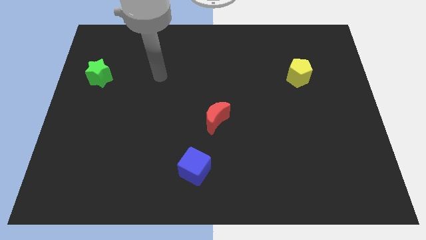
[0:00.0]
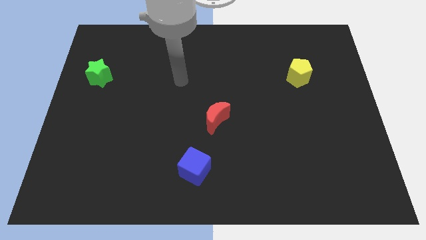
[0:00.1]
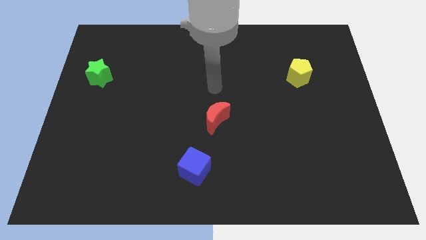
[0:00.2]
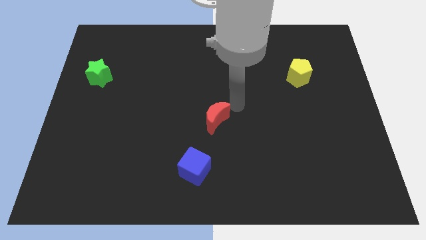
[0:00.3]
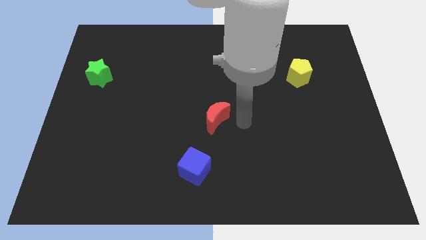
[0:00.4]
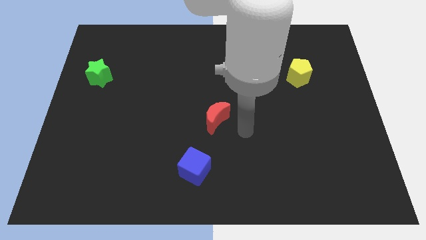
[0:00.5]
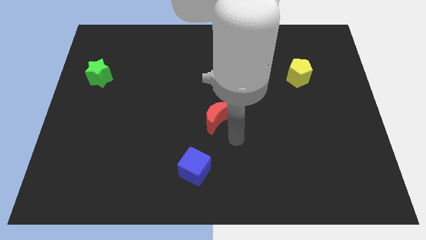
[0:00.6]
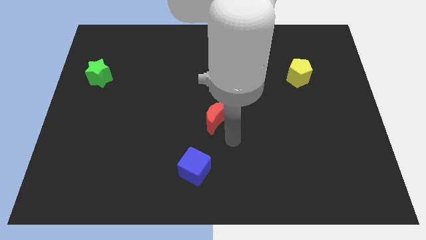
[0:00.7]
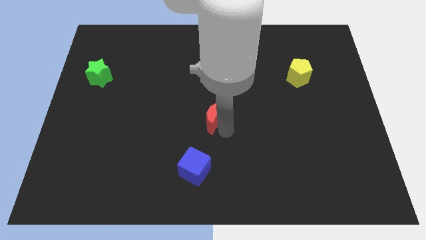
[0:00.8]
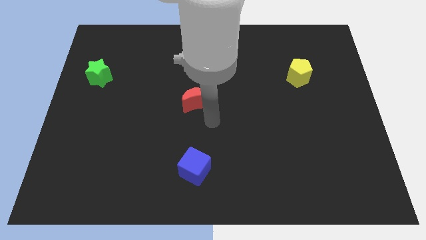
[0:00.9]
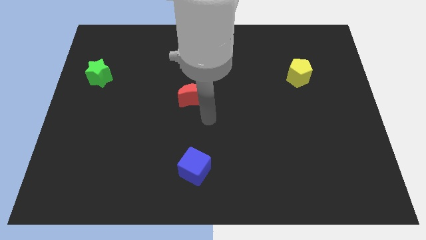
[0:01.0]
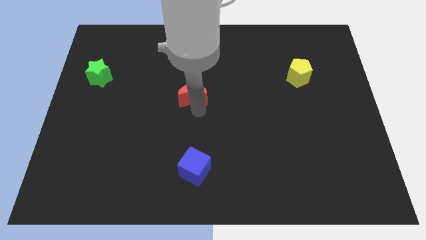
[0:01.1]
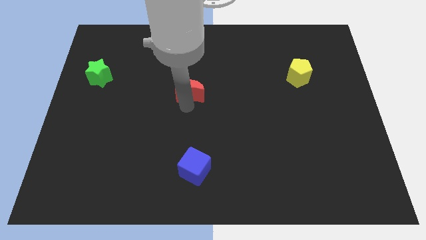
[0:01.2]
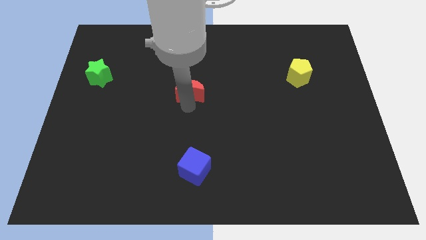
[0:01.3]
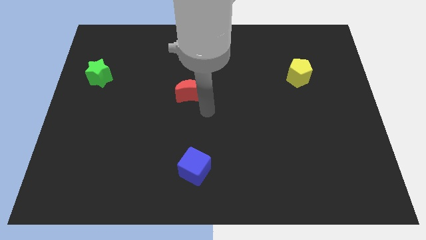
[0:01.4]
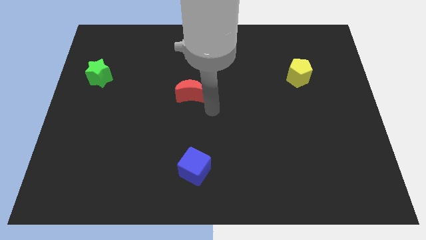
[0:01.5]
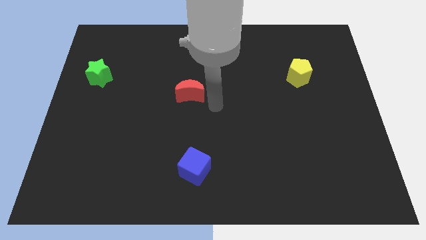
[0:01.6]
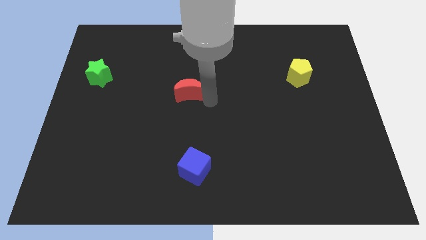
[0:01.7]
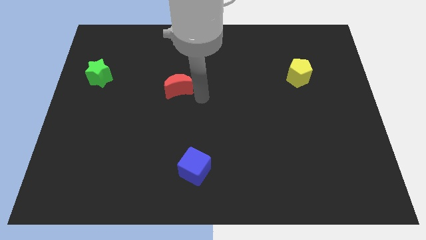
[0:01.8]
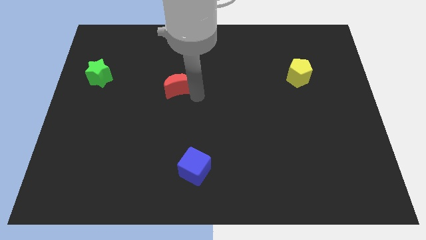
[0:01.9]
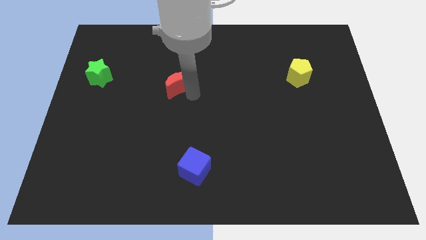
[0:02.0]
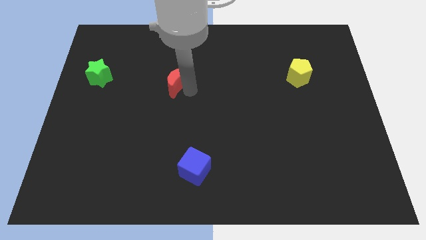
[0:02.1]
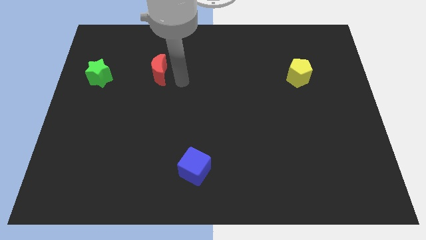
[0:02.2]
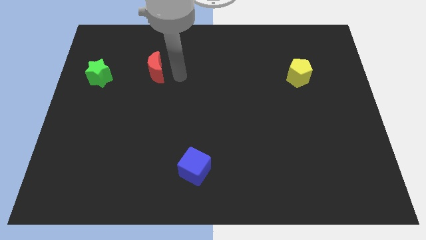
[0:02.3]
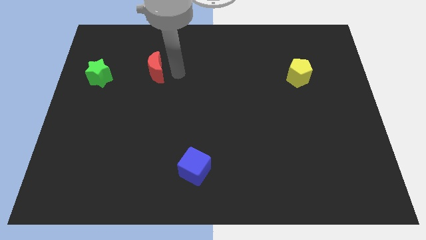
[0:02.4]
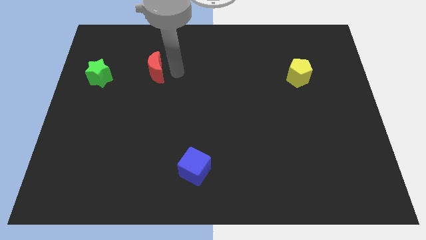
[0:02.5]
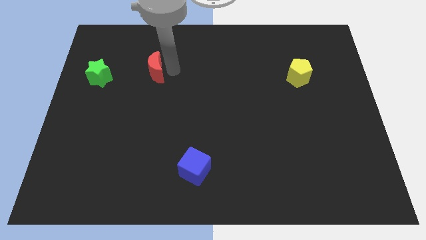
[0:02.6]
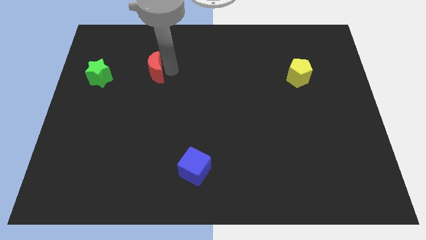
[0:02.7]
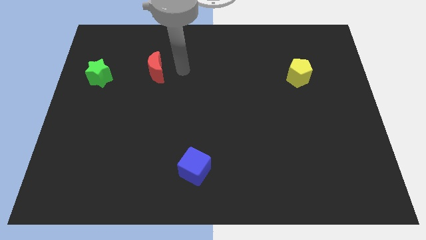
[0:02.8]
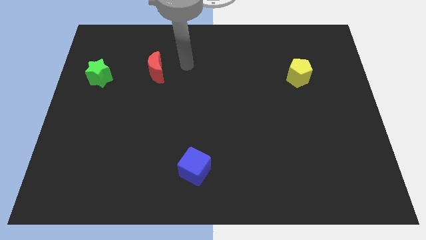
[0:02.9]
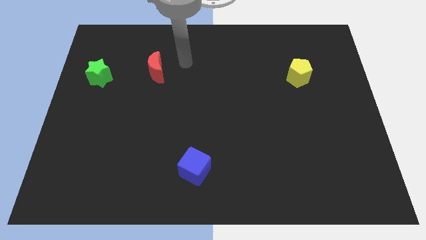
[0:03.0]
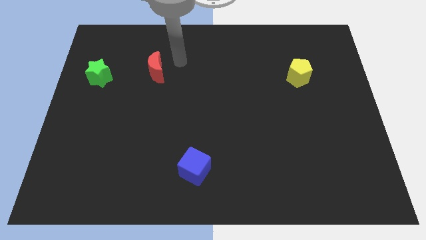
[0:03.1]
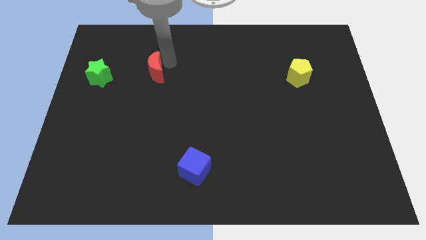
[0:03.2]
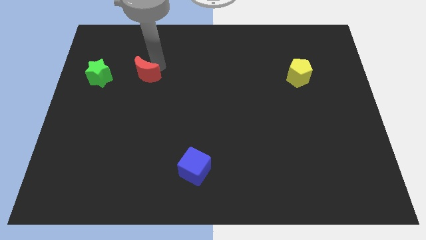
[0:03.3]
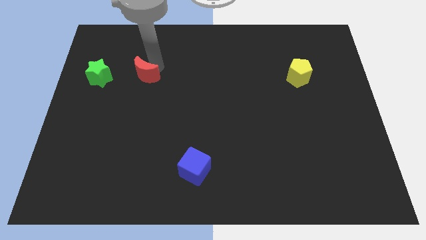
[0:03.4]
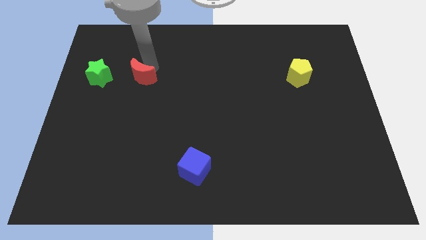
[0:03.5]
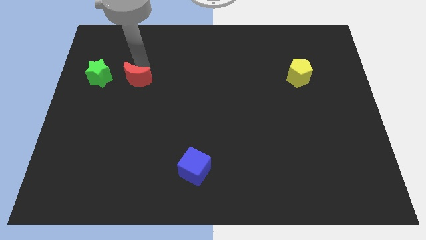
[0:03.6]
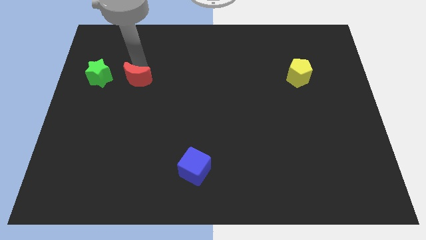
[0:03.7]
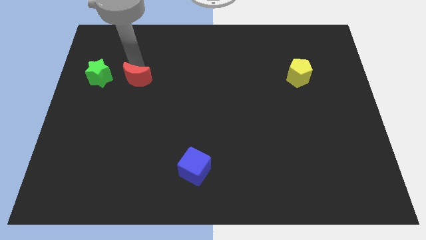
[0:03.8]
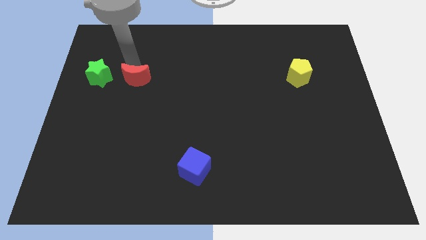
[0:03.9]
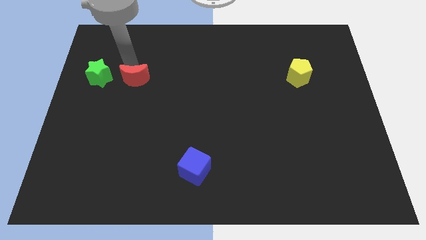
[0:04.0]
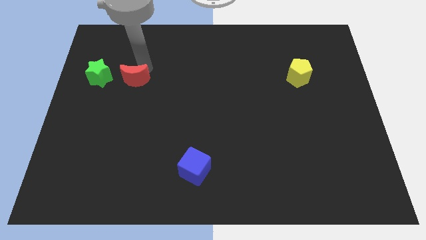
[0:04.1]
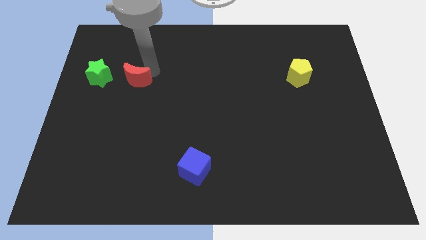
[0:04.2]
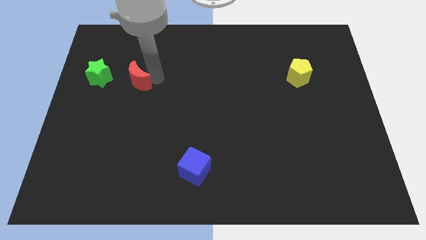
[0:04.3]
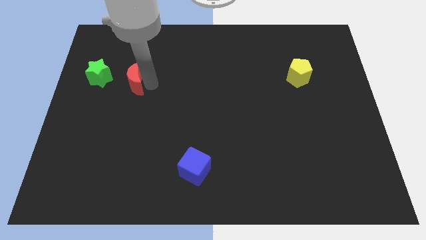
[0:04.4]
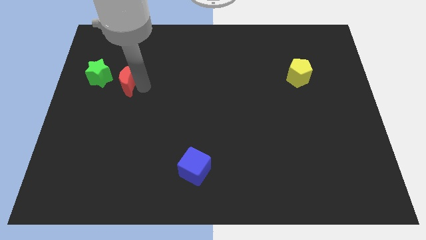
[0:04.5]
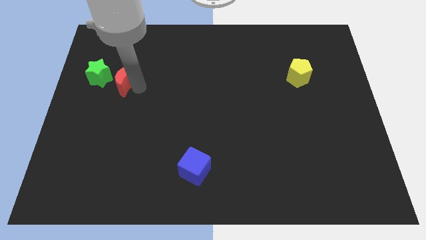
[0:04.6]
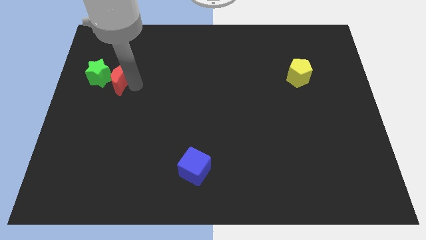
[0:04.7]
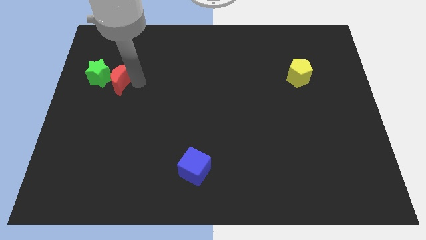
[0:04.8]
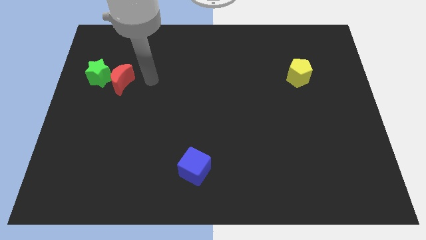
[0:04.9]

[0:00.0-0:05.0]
move the red moon to the green star

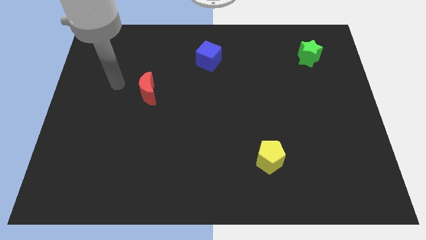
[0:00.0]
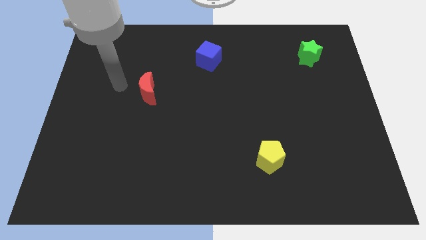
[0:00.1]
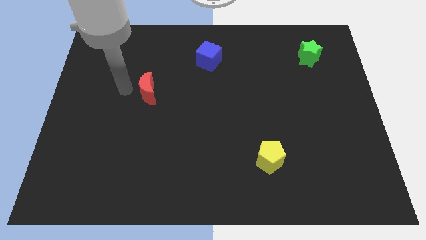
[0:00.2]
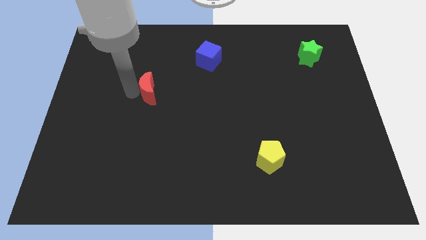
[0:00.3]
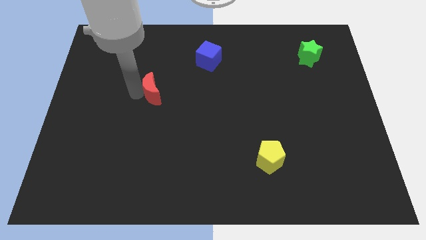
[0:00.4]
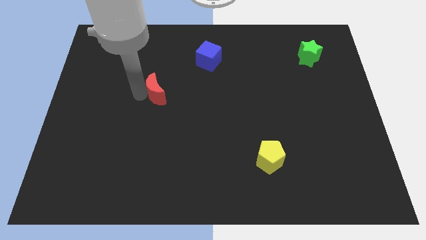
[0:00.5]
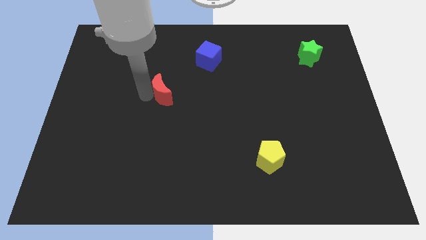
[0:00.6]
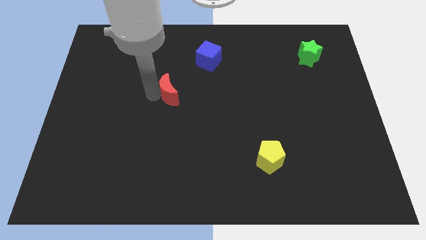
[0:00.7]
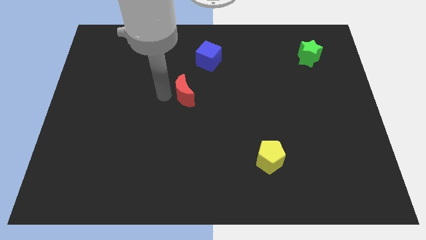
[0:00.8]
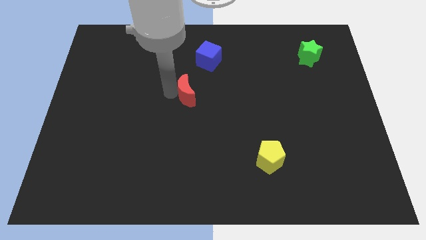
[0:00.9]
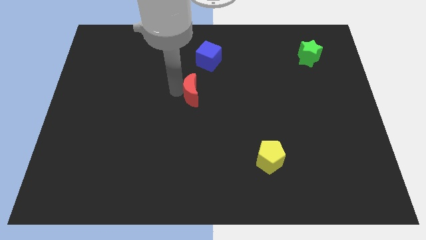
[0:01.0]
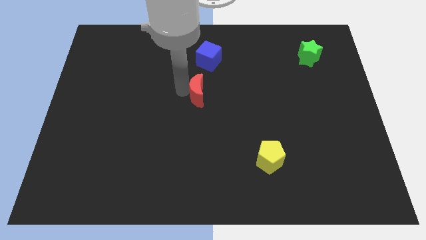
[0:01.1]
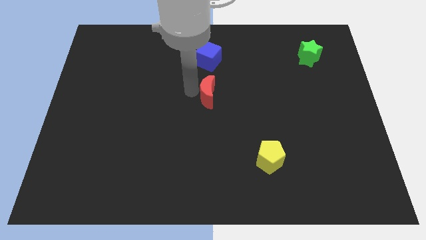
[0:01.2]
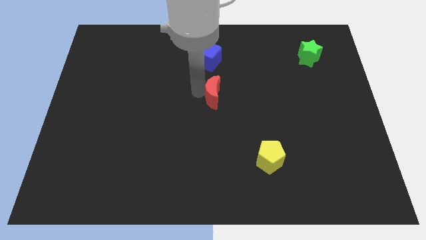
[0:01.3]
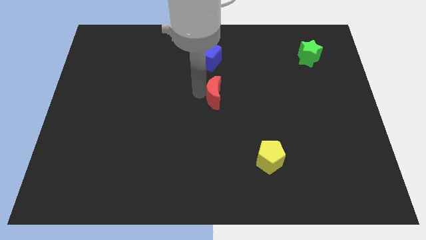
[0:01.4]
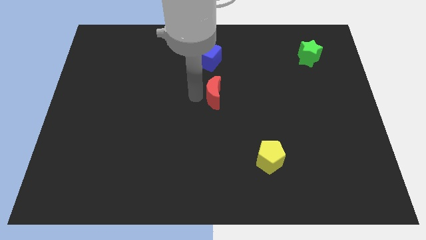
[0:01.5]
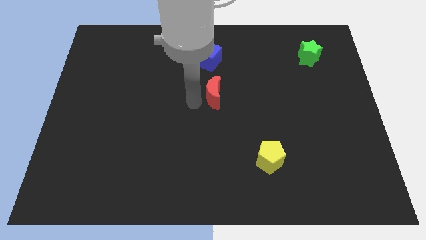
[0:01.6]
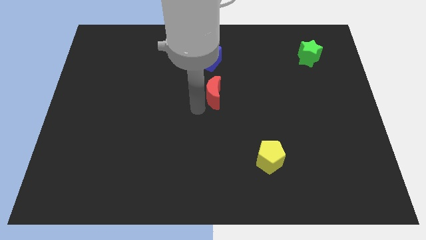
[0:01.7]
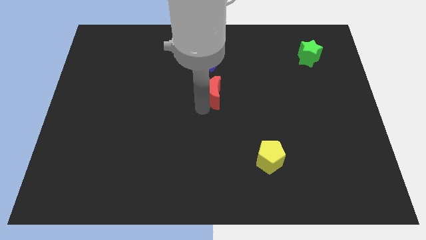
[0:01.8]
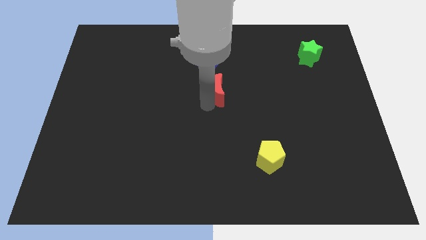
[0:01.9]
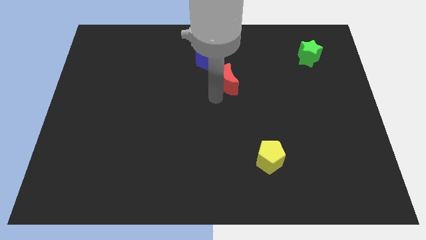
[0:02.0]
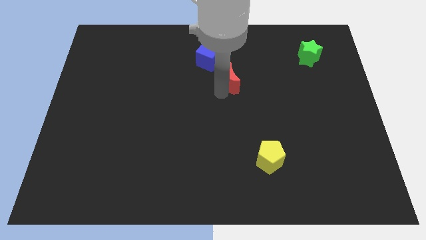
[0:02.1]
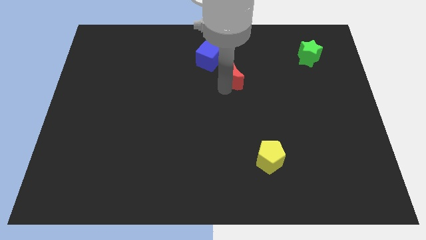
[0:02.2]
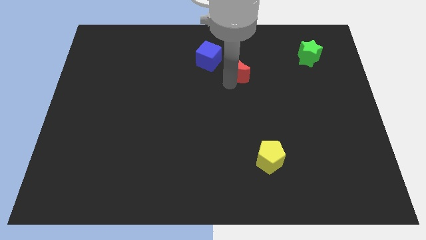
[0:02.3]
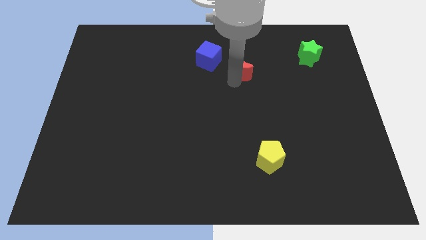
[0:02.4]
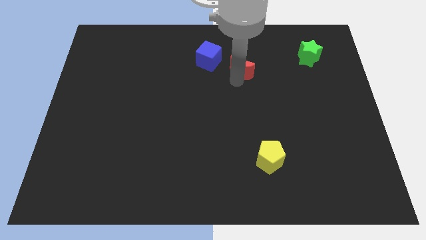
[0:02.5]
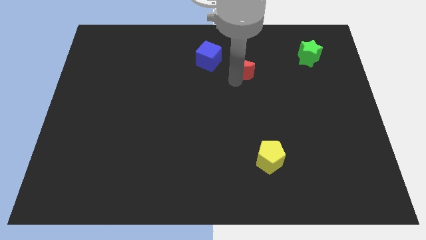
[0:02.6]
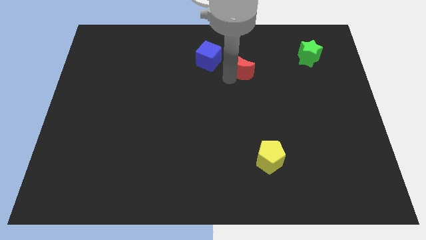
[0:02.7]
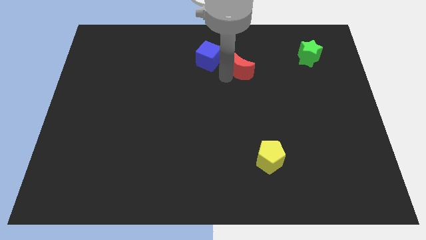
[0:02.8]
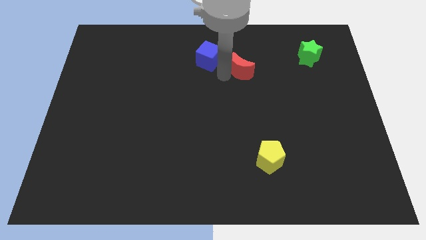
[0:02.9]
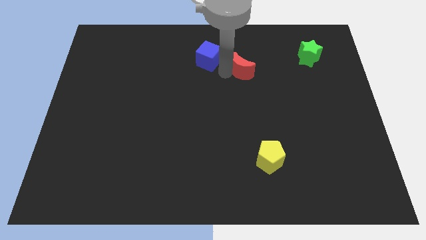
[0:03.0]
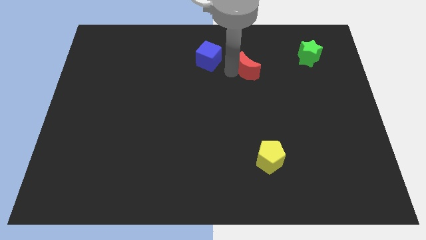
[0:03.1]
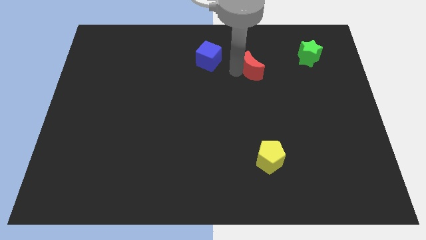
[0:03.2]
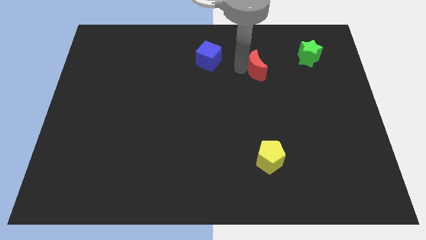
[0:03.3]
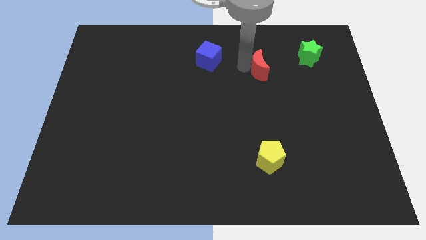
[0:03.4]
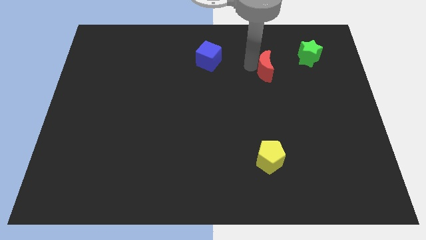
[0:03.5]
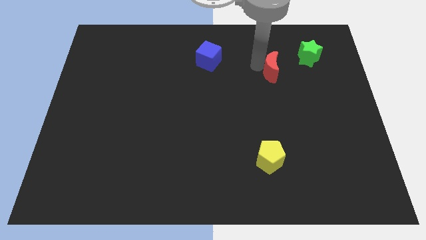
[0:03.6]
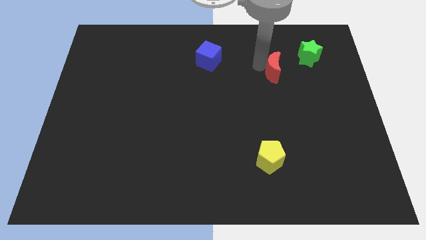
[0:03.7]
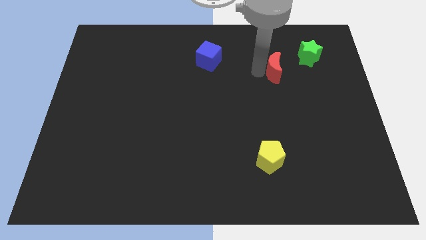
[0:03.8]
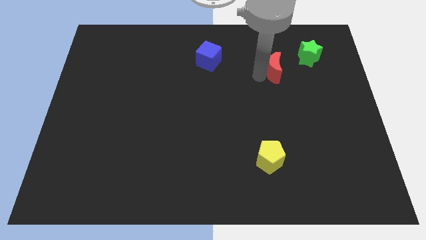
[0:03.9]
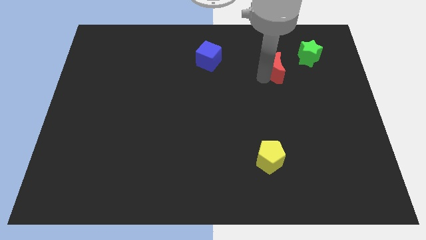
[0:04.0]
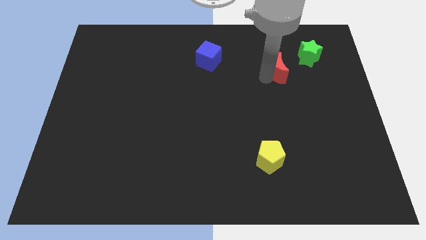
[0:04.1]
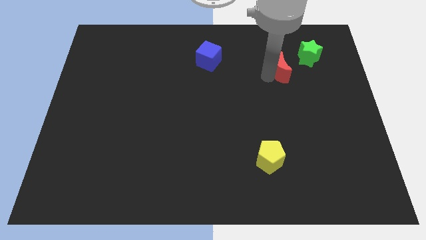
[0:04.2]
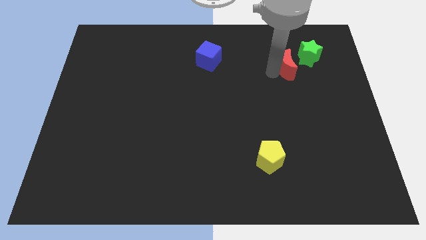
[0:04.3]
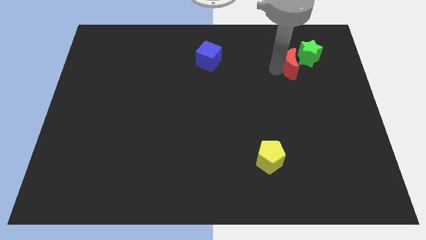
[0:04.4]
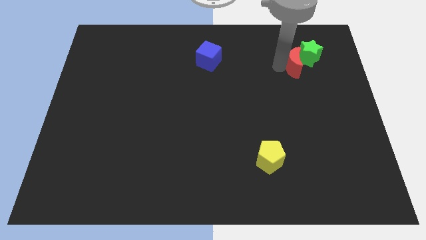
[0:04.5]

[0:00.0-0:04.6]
push the moon close to the star
